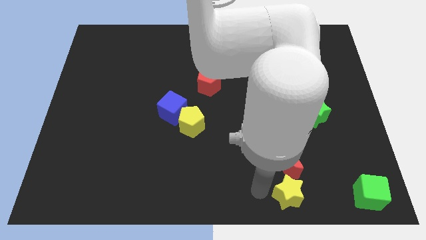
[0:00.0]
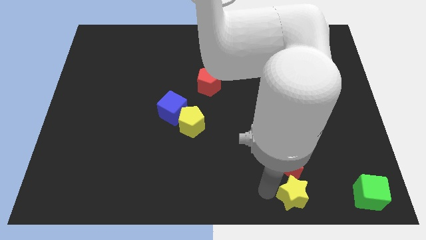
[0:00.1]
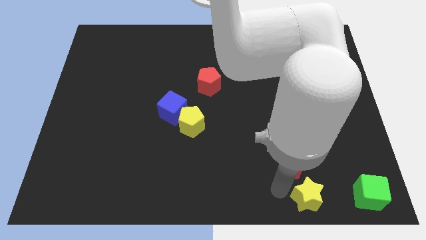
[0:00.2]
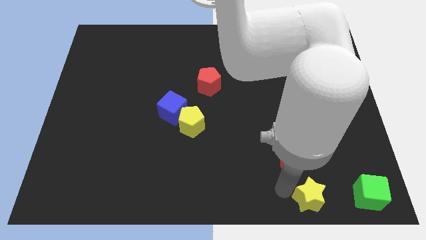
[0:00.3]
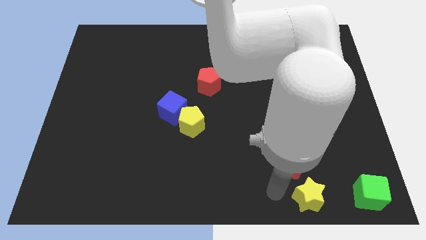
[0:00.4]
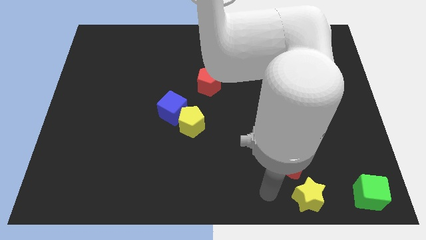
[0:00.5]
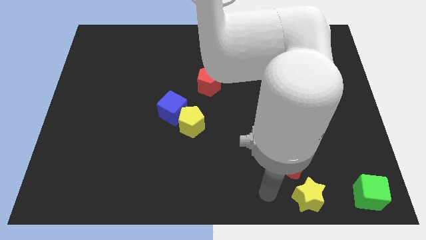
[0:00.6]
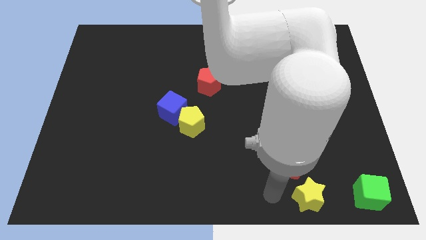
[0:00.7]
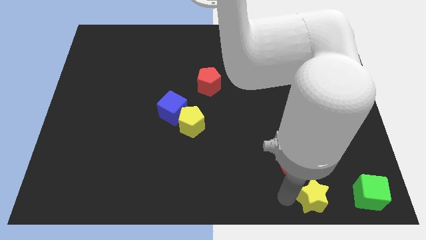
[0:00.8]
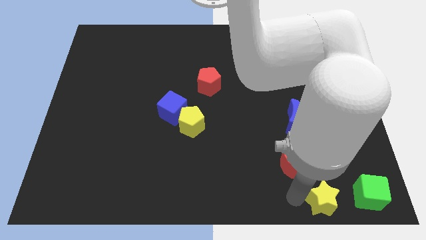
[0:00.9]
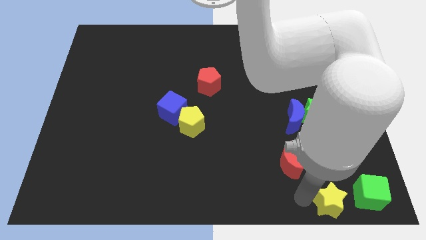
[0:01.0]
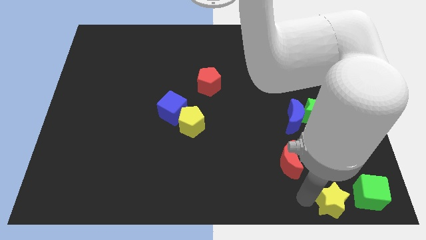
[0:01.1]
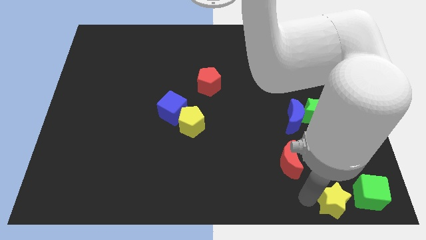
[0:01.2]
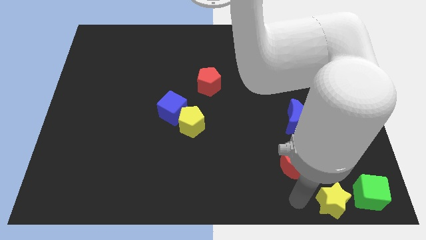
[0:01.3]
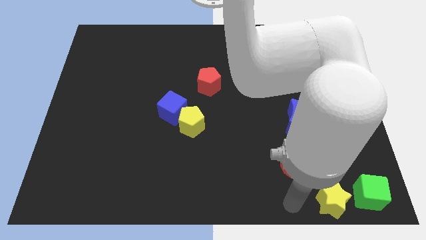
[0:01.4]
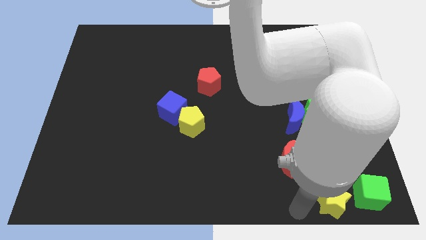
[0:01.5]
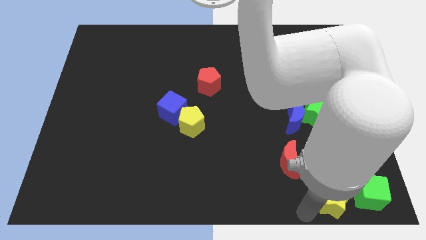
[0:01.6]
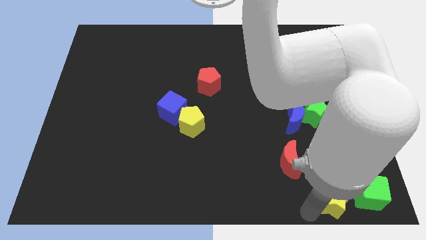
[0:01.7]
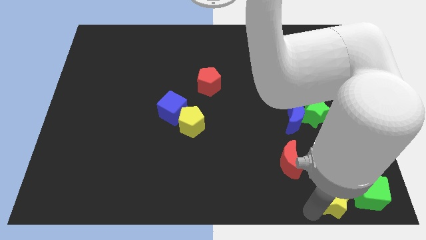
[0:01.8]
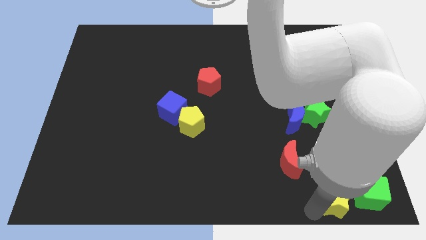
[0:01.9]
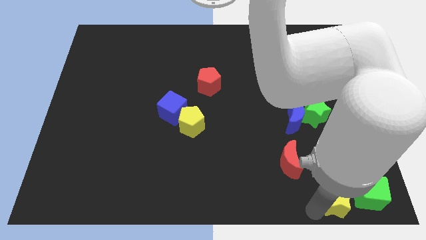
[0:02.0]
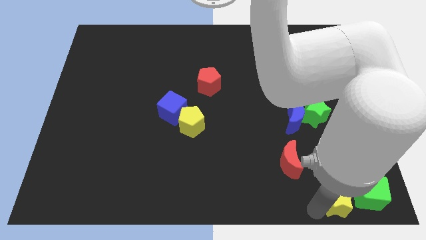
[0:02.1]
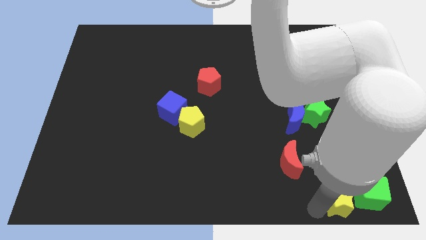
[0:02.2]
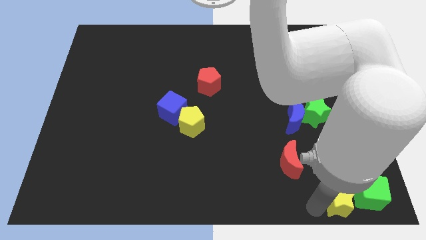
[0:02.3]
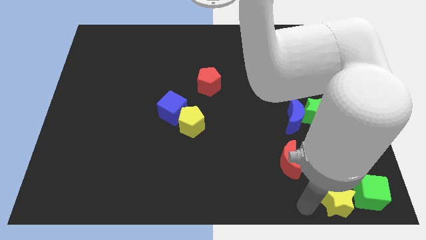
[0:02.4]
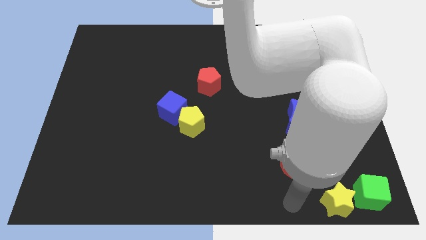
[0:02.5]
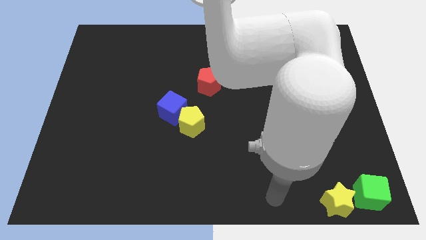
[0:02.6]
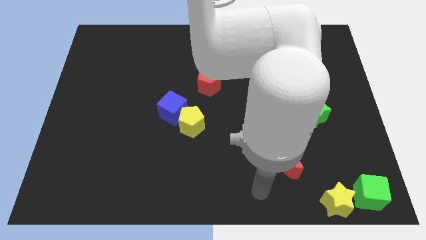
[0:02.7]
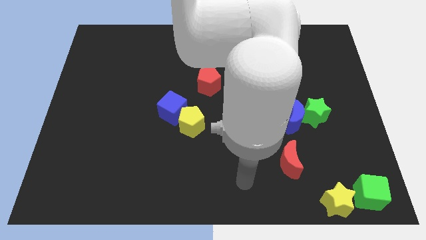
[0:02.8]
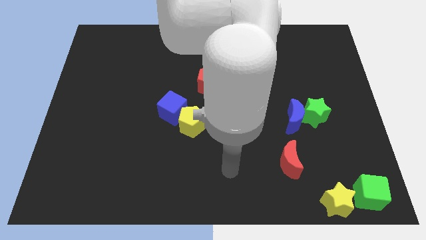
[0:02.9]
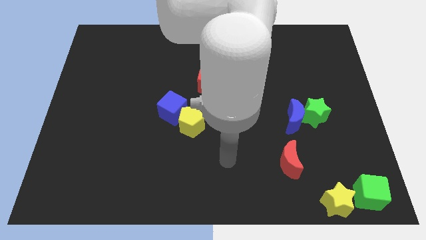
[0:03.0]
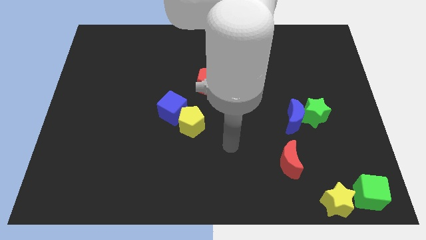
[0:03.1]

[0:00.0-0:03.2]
push the yellow star into the green cube

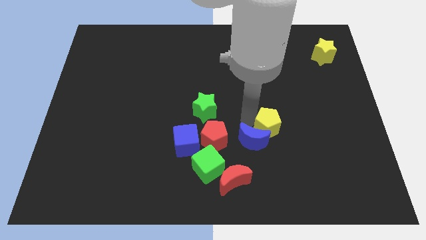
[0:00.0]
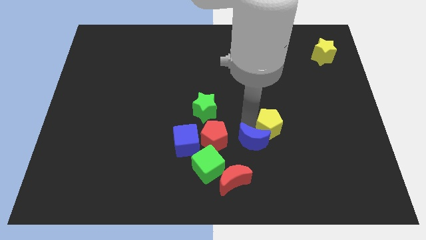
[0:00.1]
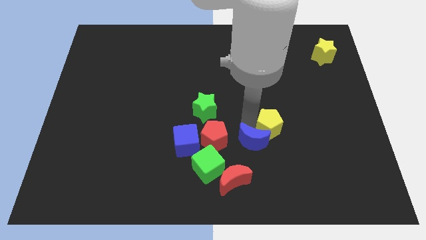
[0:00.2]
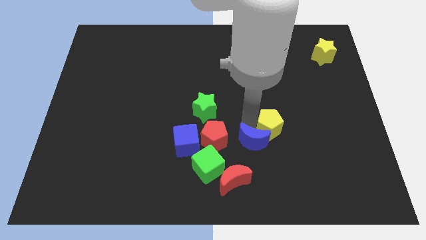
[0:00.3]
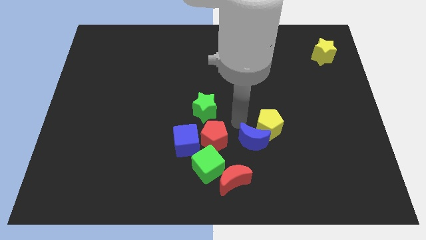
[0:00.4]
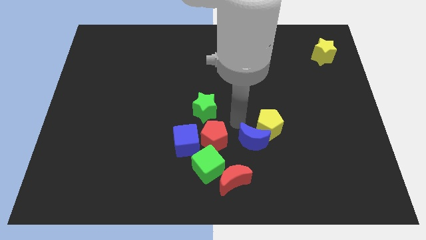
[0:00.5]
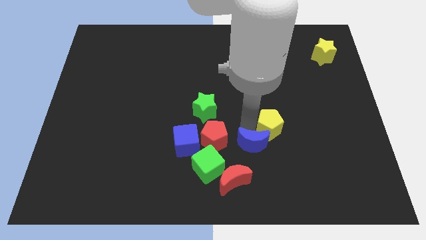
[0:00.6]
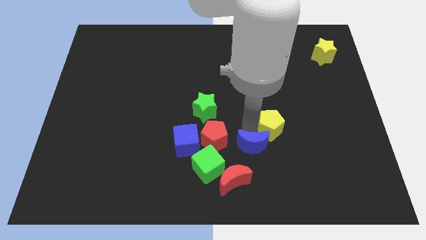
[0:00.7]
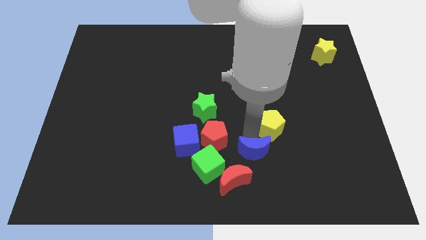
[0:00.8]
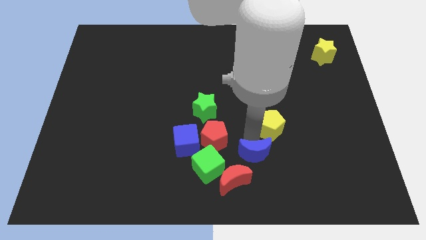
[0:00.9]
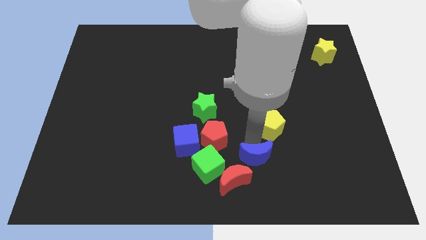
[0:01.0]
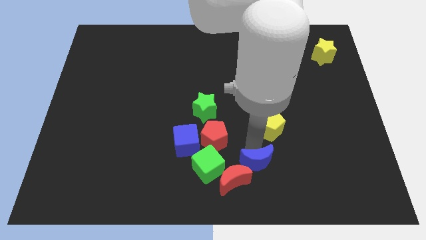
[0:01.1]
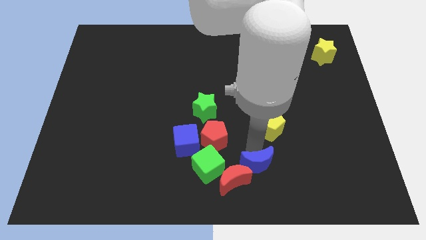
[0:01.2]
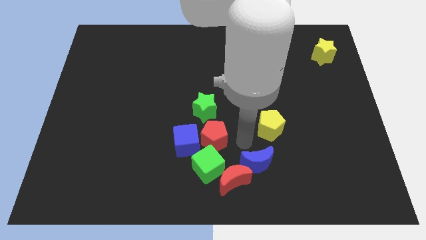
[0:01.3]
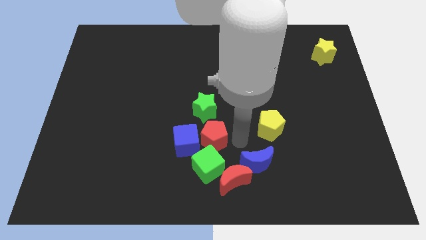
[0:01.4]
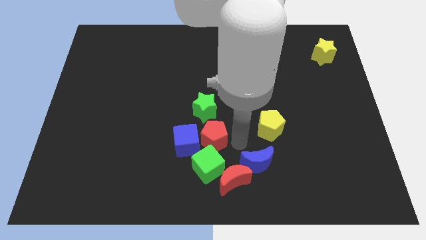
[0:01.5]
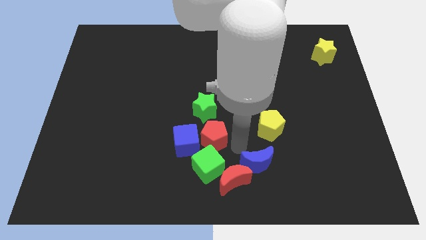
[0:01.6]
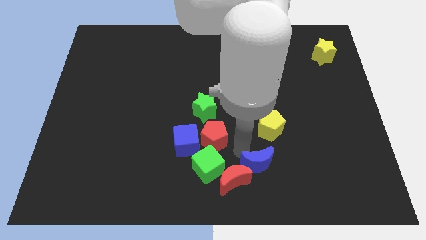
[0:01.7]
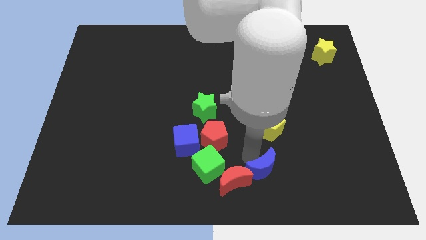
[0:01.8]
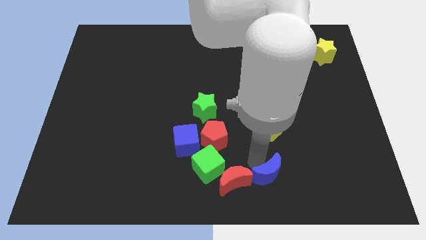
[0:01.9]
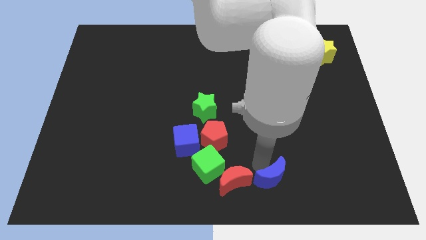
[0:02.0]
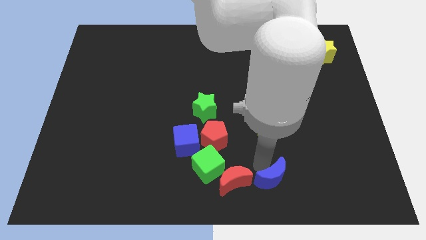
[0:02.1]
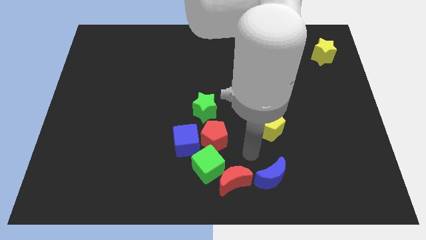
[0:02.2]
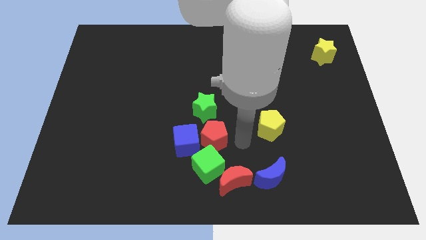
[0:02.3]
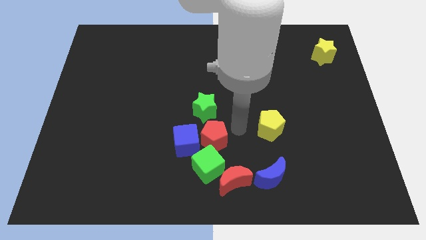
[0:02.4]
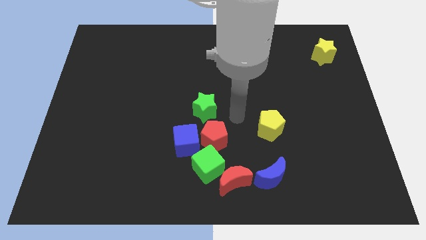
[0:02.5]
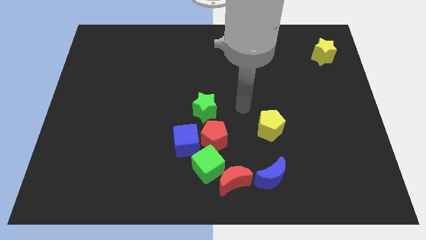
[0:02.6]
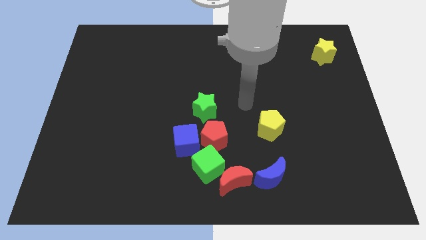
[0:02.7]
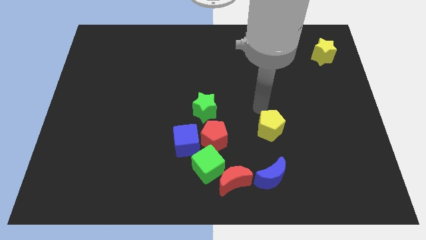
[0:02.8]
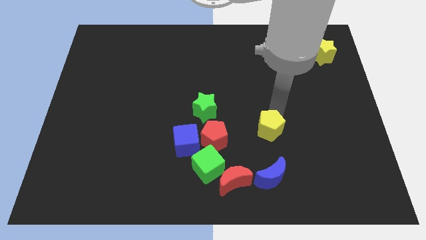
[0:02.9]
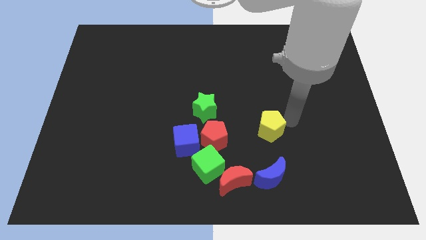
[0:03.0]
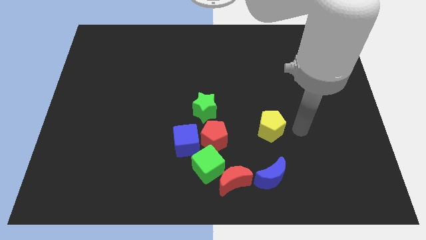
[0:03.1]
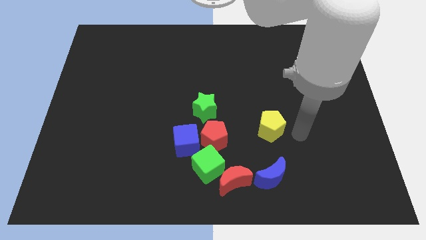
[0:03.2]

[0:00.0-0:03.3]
push the blue crescent close to the right side of the red moon

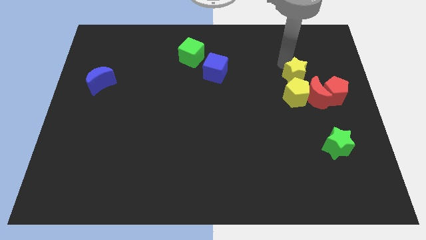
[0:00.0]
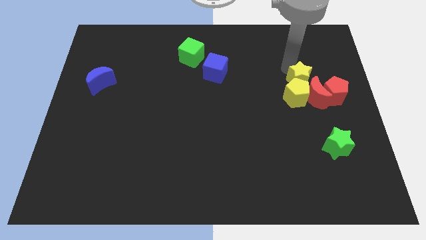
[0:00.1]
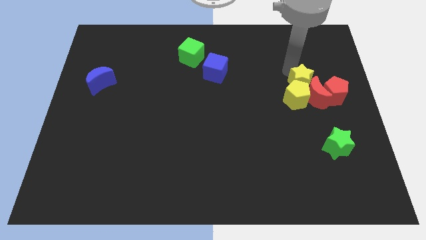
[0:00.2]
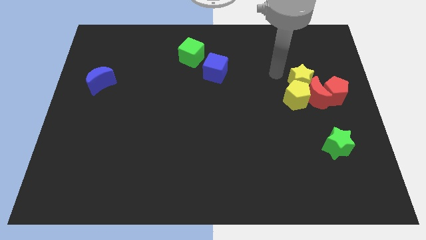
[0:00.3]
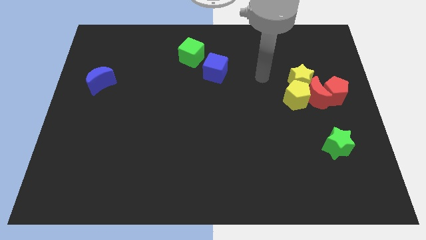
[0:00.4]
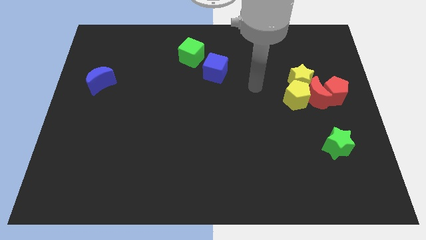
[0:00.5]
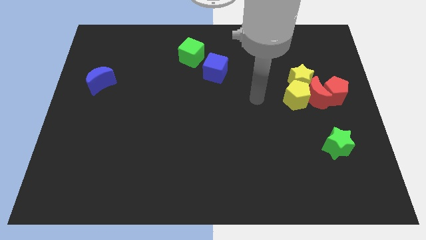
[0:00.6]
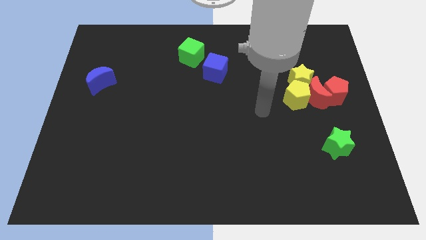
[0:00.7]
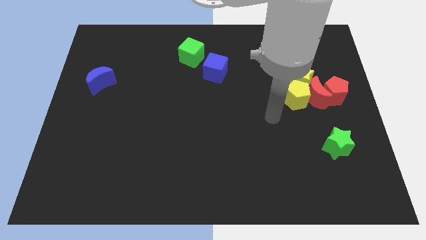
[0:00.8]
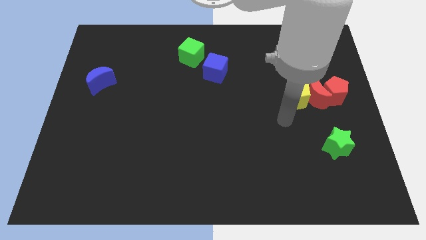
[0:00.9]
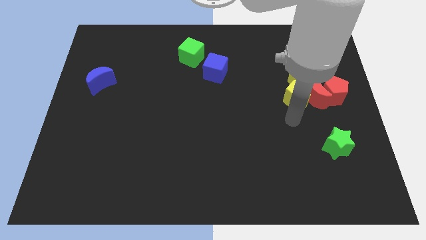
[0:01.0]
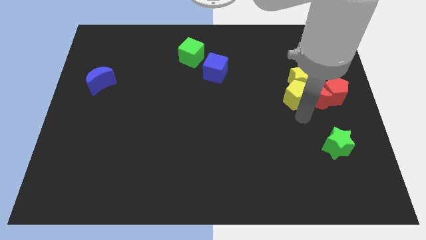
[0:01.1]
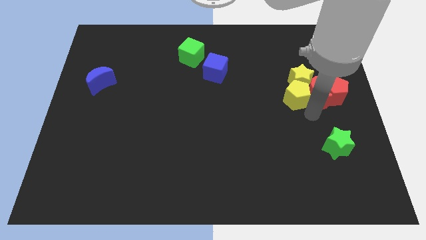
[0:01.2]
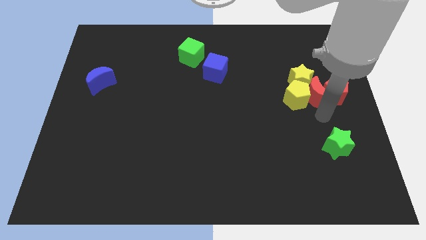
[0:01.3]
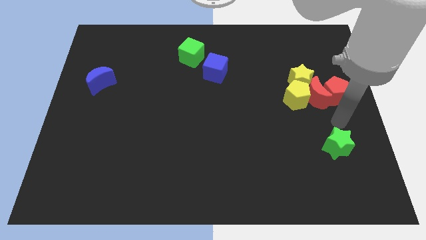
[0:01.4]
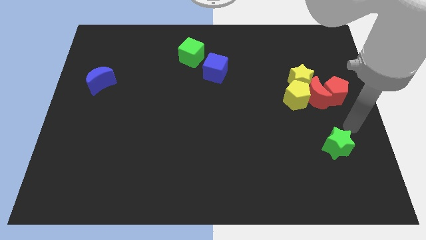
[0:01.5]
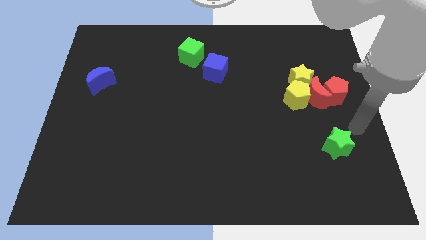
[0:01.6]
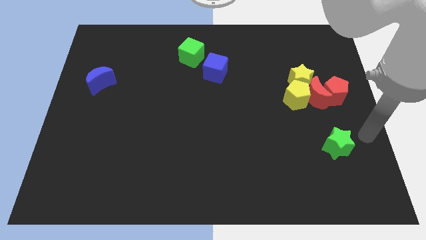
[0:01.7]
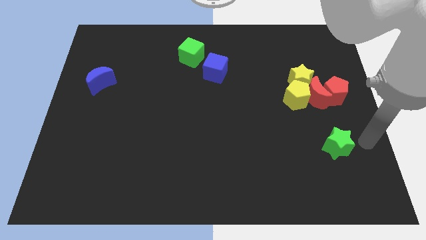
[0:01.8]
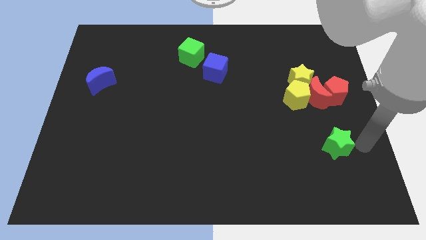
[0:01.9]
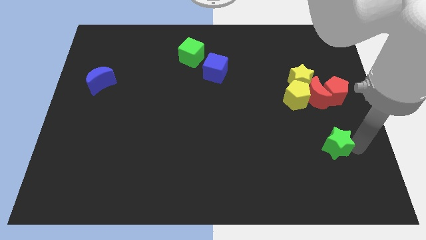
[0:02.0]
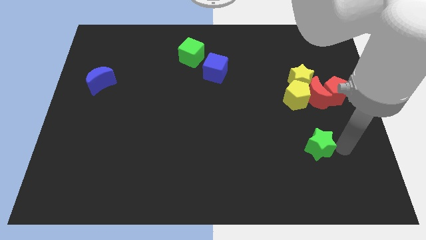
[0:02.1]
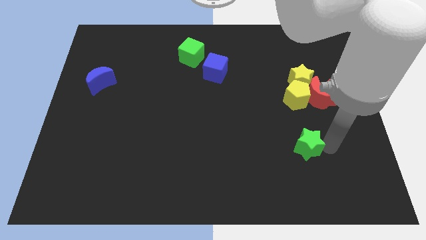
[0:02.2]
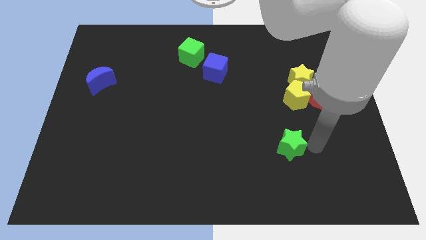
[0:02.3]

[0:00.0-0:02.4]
push green star below yellow pentagon

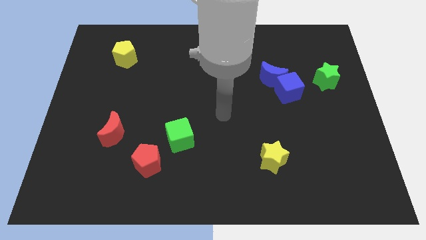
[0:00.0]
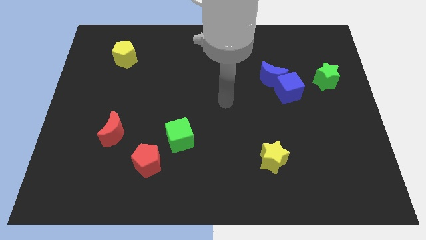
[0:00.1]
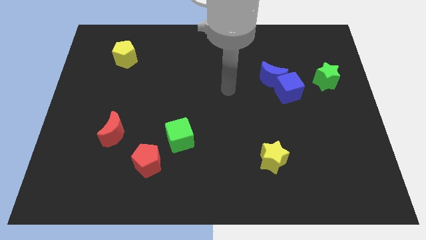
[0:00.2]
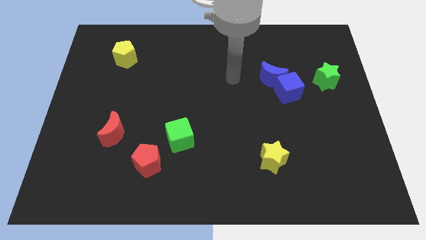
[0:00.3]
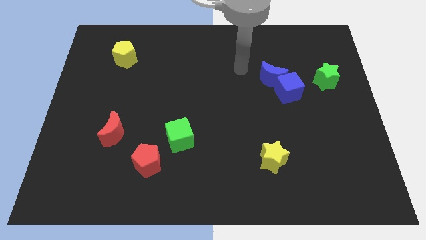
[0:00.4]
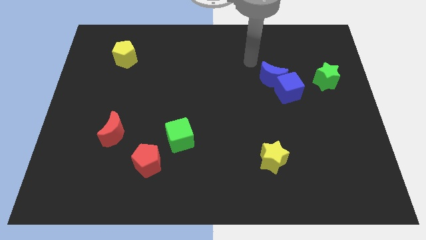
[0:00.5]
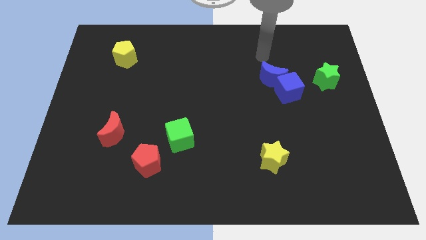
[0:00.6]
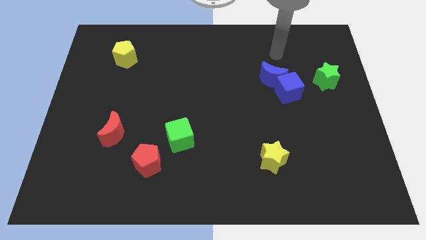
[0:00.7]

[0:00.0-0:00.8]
move your arm above the blue crescent
